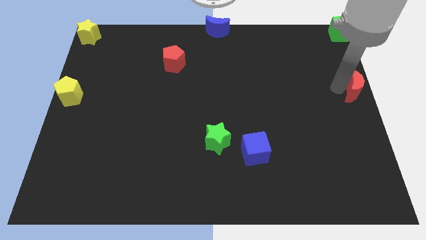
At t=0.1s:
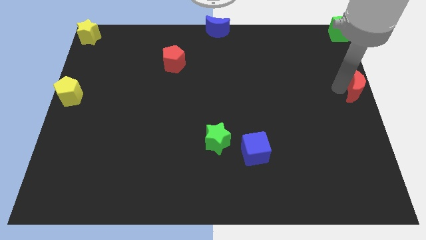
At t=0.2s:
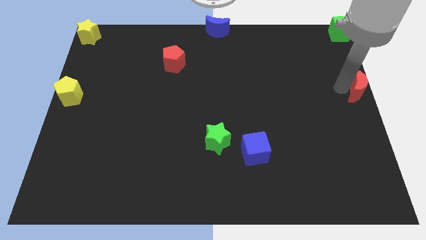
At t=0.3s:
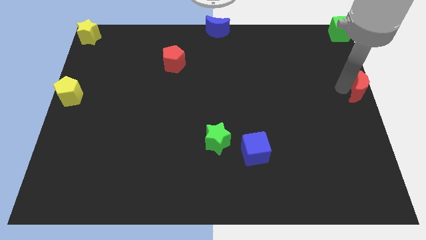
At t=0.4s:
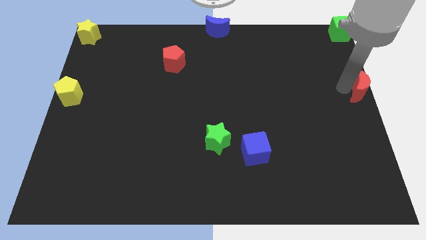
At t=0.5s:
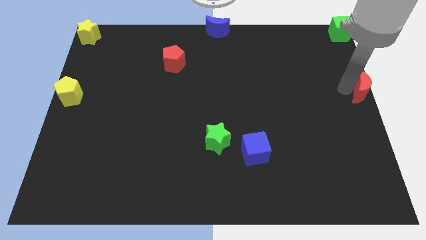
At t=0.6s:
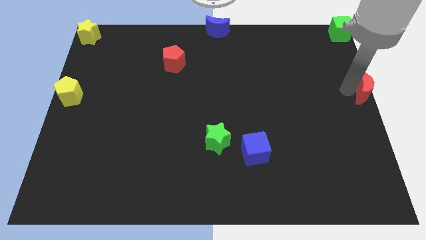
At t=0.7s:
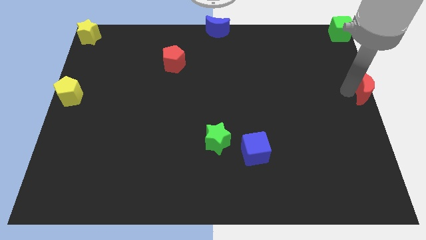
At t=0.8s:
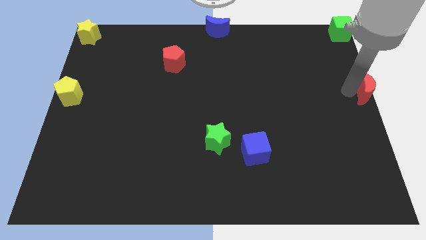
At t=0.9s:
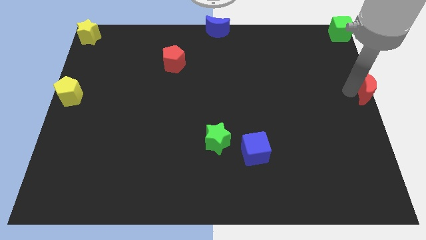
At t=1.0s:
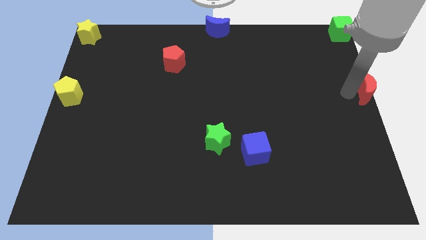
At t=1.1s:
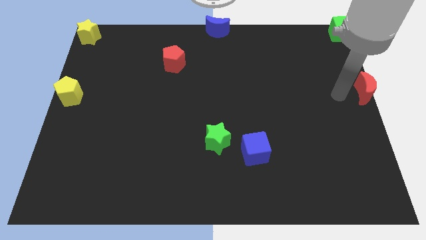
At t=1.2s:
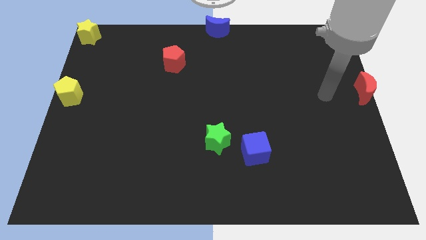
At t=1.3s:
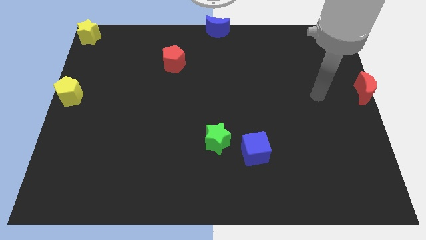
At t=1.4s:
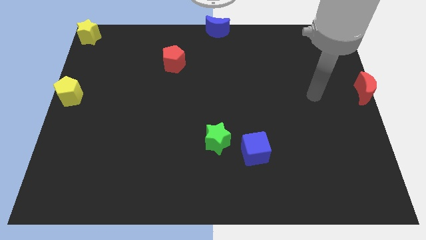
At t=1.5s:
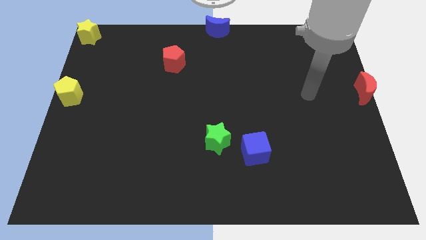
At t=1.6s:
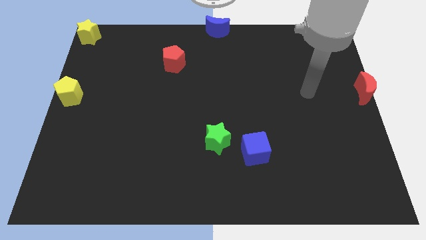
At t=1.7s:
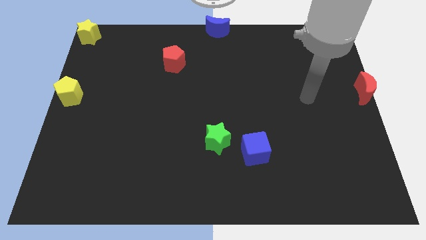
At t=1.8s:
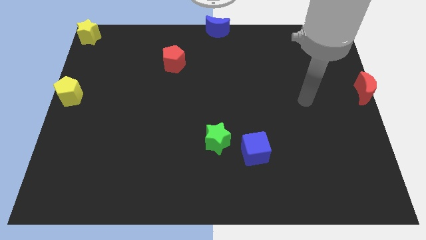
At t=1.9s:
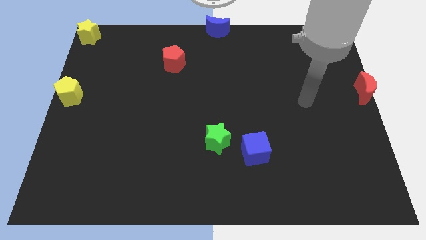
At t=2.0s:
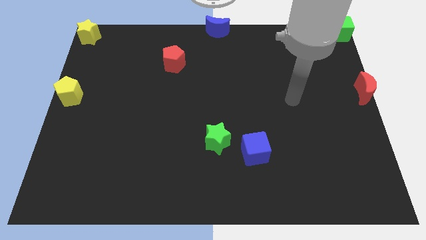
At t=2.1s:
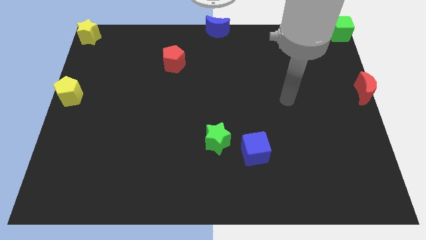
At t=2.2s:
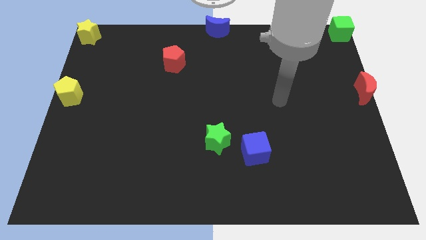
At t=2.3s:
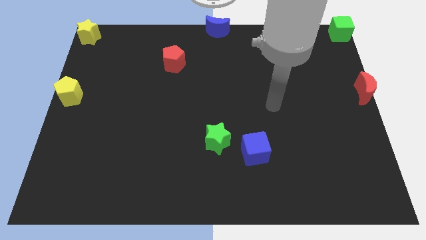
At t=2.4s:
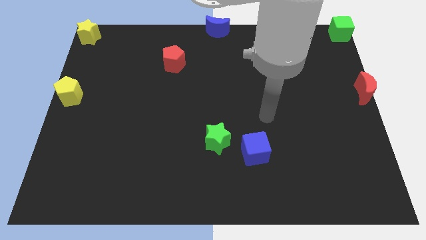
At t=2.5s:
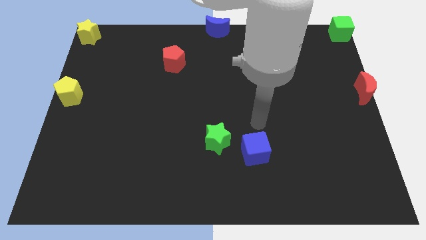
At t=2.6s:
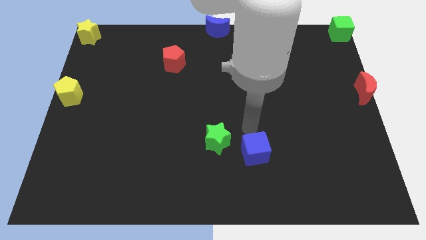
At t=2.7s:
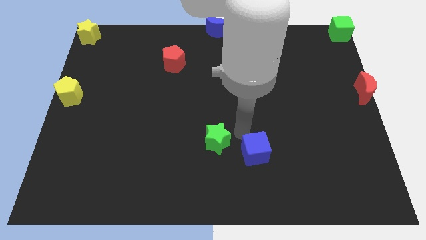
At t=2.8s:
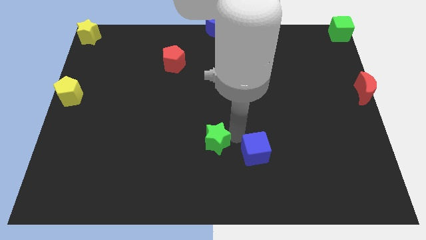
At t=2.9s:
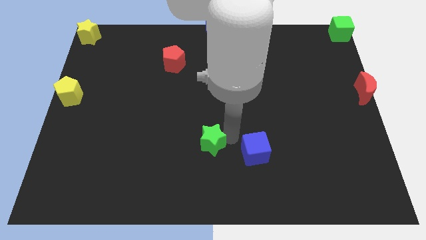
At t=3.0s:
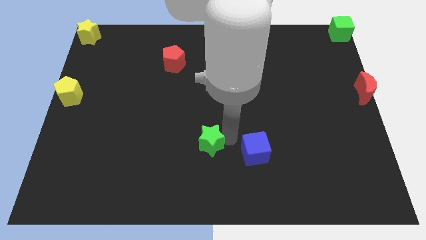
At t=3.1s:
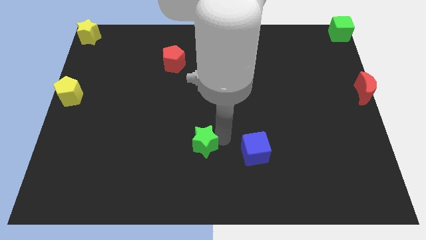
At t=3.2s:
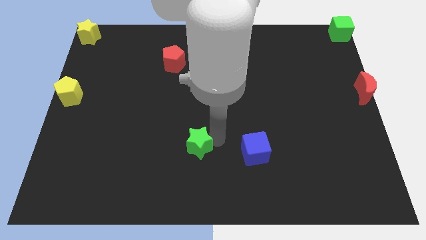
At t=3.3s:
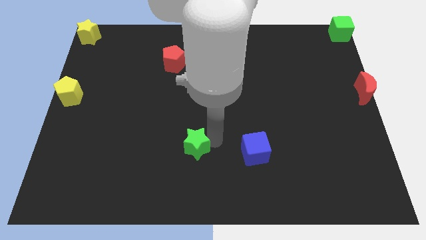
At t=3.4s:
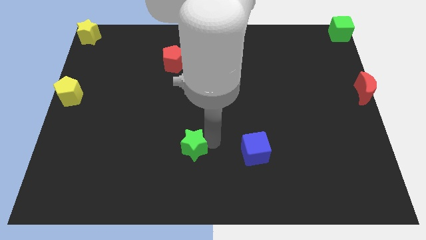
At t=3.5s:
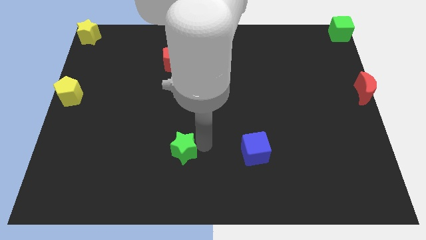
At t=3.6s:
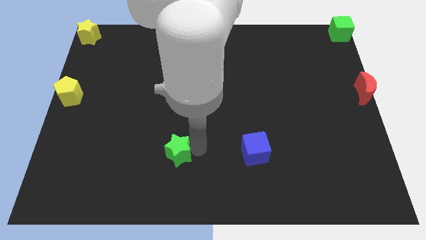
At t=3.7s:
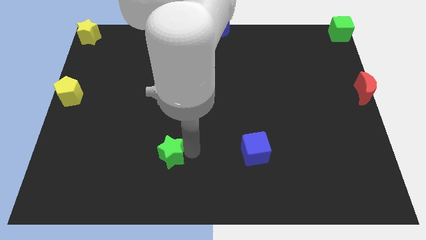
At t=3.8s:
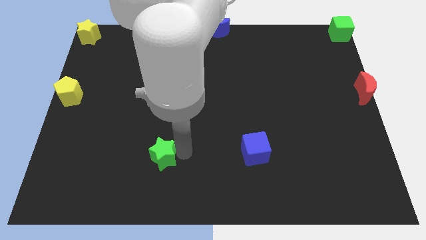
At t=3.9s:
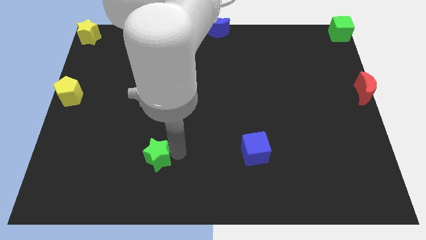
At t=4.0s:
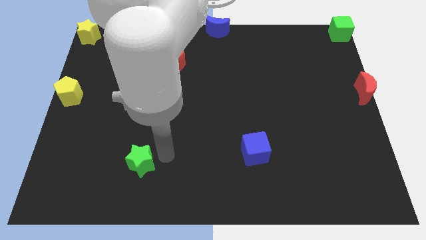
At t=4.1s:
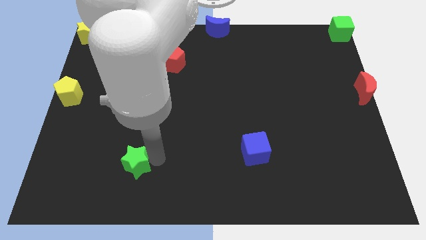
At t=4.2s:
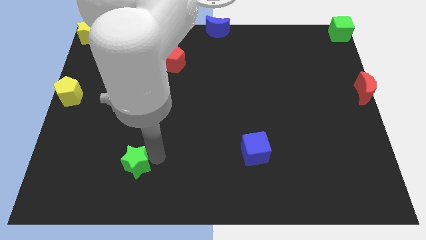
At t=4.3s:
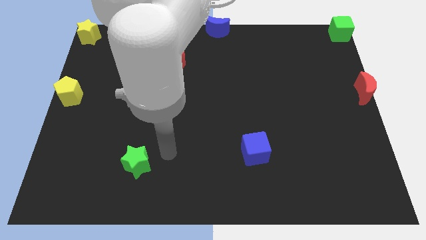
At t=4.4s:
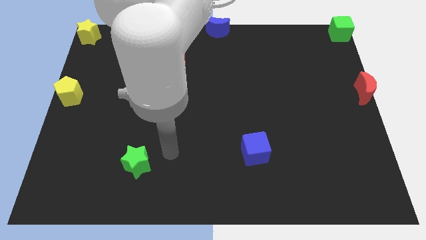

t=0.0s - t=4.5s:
push the green star slightly down

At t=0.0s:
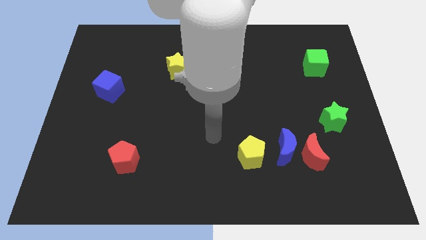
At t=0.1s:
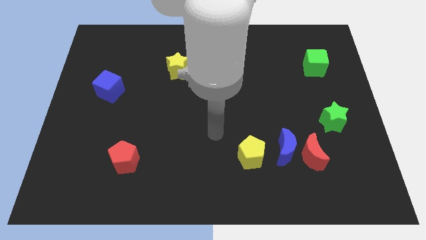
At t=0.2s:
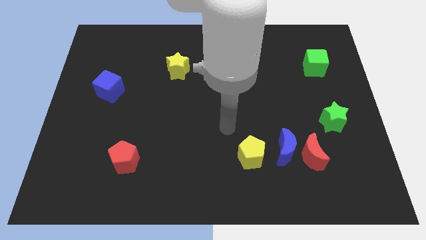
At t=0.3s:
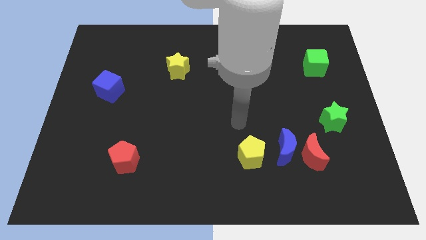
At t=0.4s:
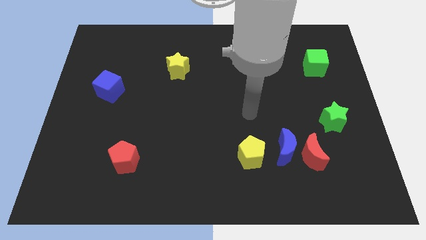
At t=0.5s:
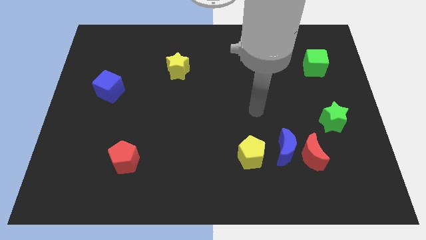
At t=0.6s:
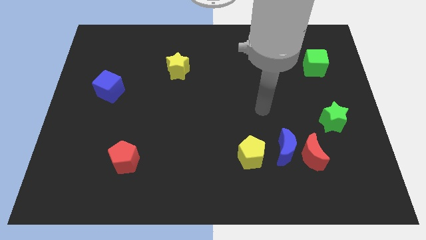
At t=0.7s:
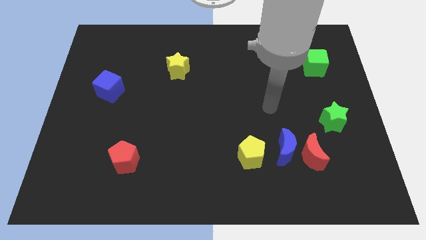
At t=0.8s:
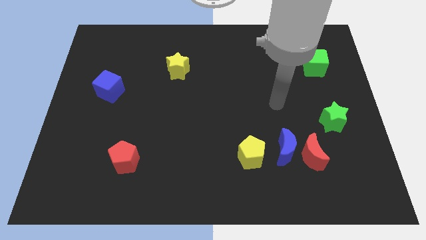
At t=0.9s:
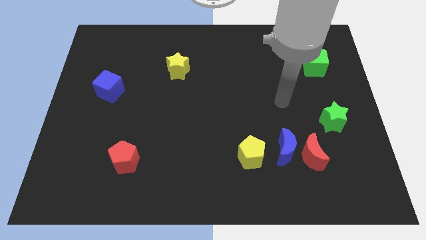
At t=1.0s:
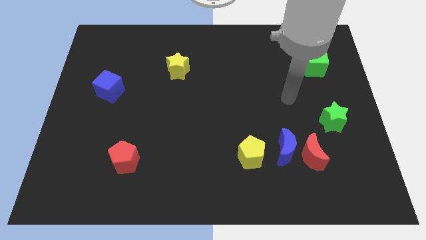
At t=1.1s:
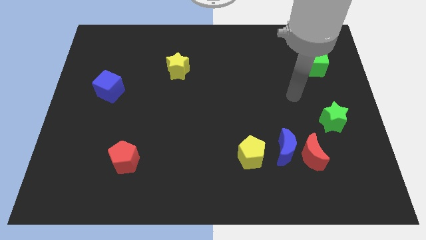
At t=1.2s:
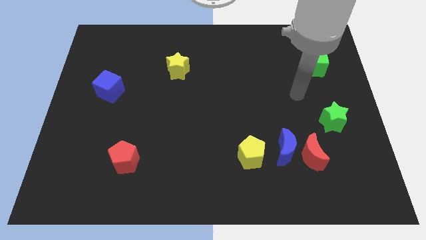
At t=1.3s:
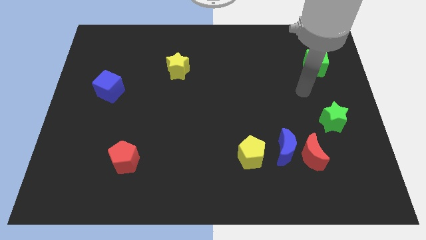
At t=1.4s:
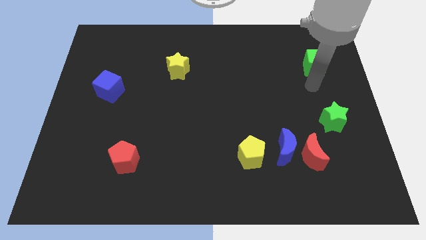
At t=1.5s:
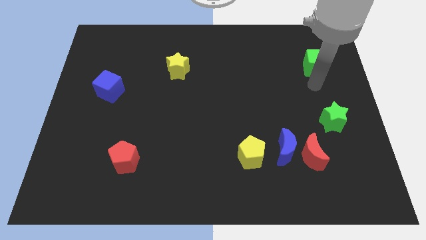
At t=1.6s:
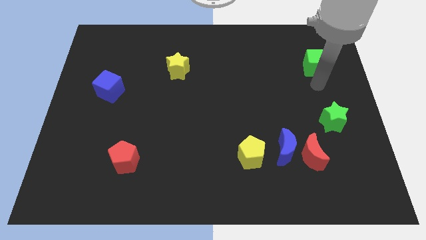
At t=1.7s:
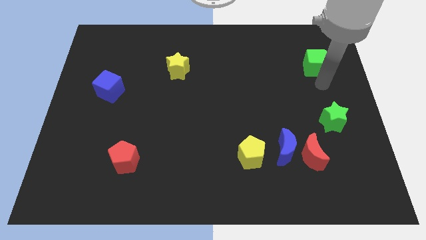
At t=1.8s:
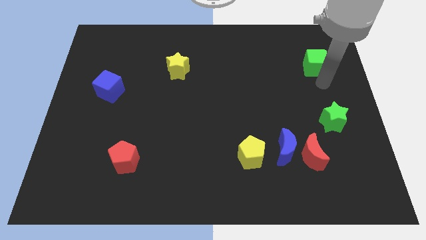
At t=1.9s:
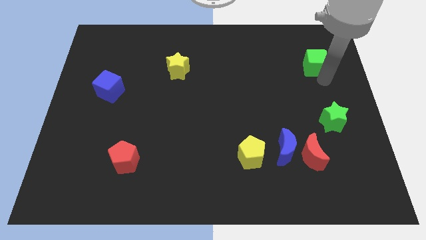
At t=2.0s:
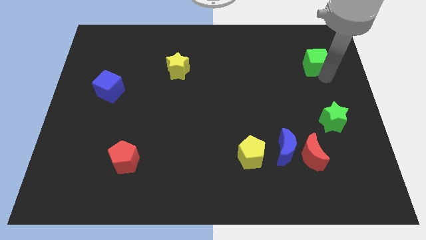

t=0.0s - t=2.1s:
tap the green cube

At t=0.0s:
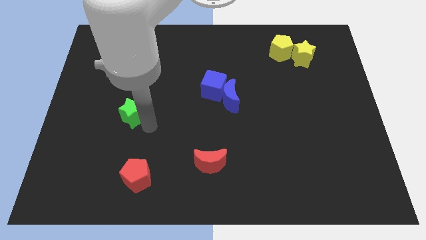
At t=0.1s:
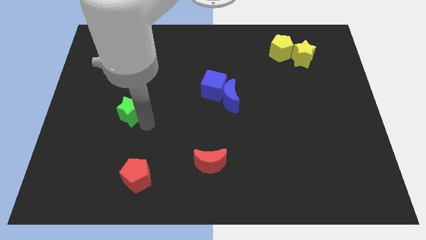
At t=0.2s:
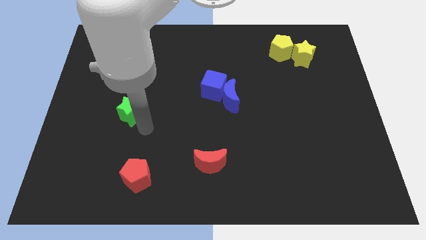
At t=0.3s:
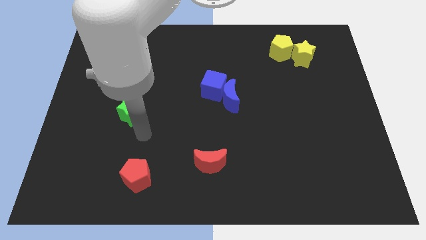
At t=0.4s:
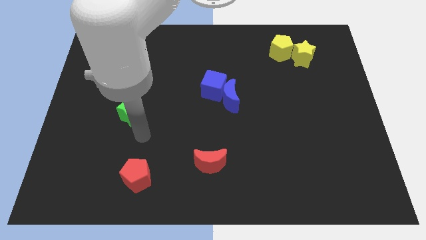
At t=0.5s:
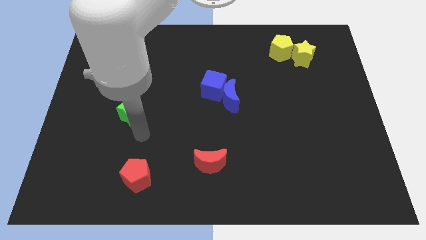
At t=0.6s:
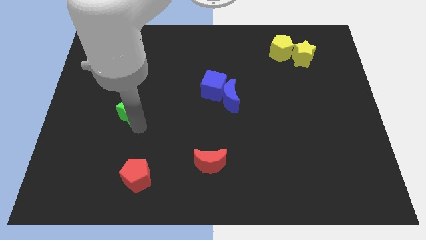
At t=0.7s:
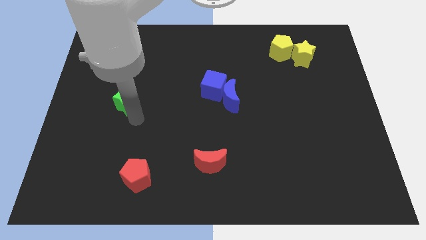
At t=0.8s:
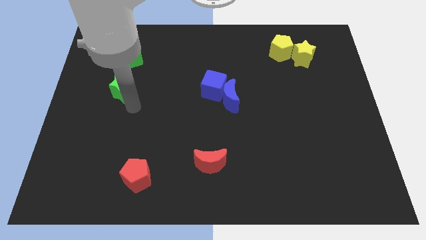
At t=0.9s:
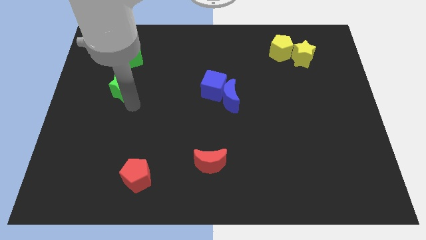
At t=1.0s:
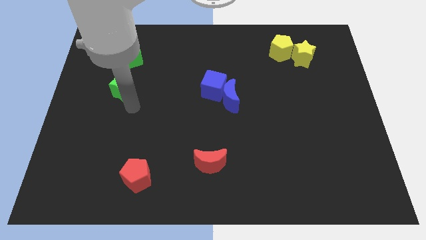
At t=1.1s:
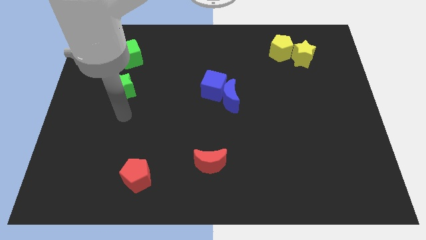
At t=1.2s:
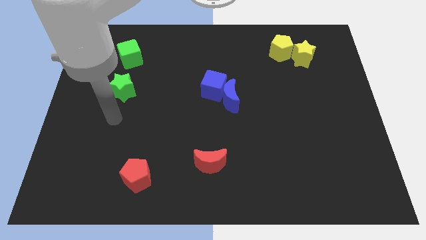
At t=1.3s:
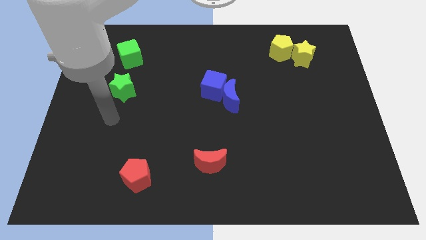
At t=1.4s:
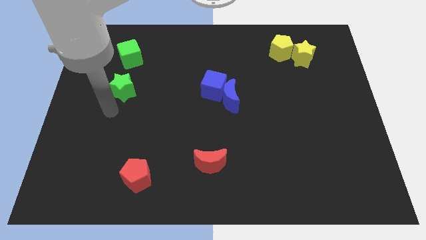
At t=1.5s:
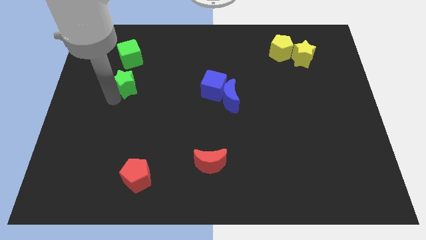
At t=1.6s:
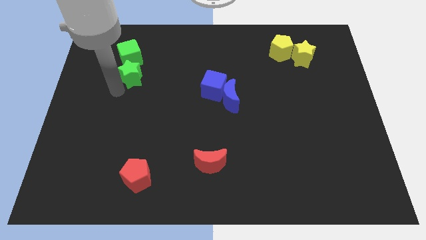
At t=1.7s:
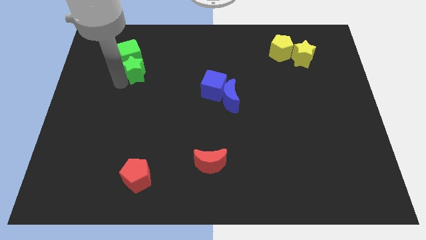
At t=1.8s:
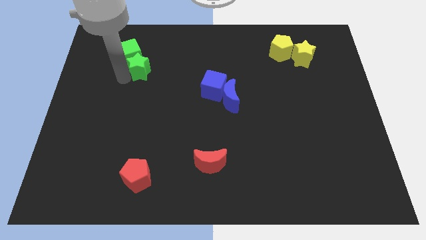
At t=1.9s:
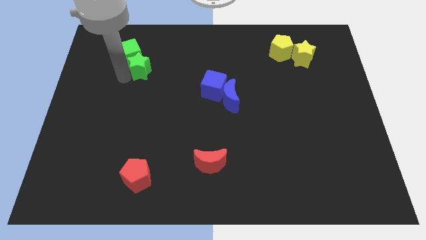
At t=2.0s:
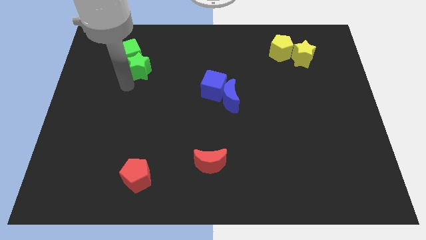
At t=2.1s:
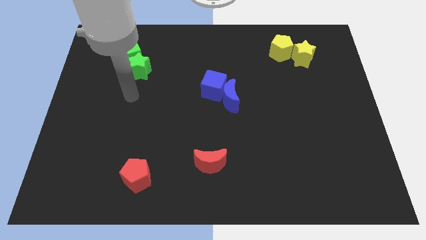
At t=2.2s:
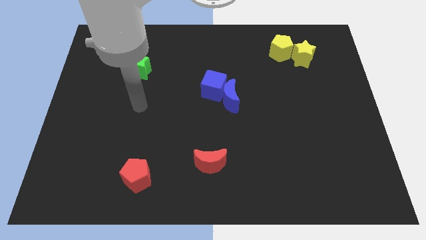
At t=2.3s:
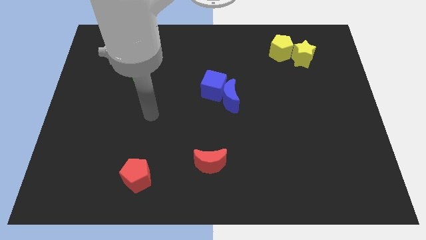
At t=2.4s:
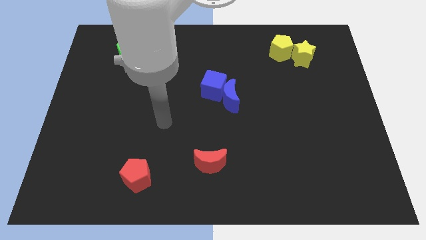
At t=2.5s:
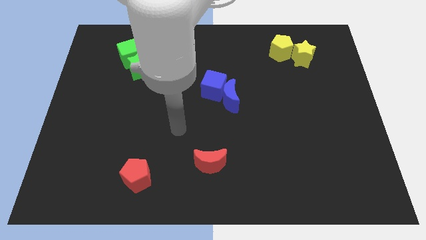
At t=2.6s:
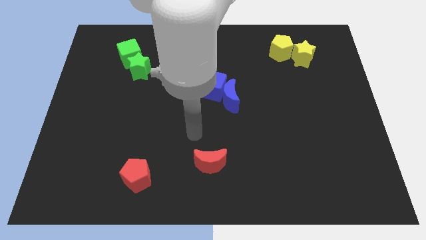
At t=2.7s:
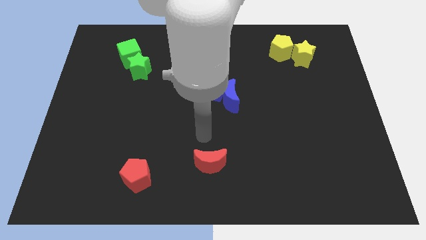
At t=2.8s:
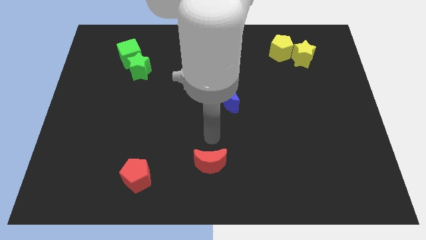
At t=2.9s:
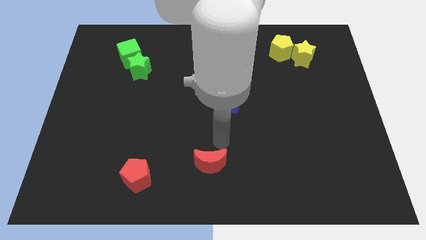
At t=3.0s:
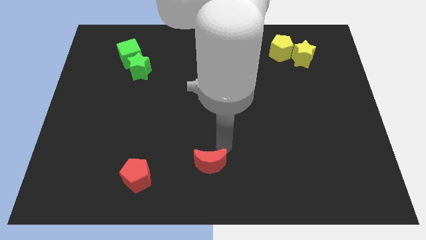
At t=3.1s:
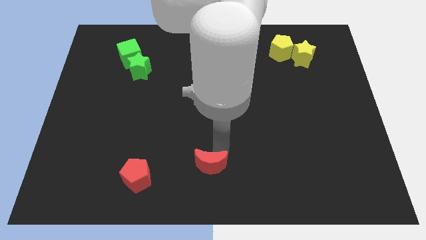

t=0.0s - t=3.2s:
push the green star towards the green cube
